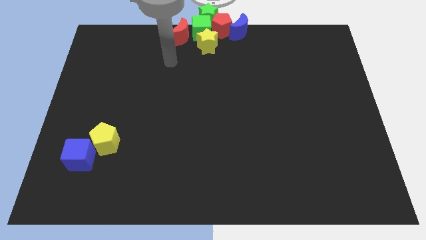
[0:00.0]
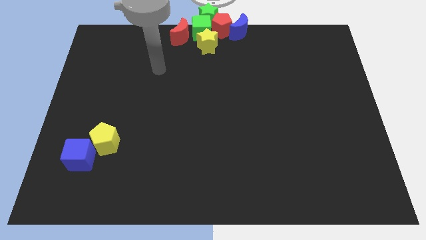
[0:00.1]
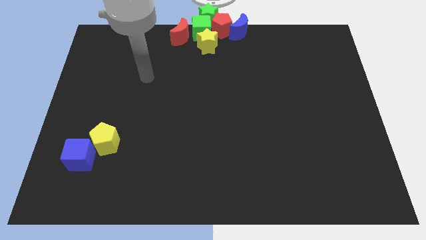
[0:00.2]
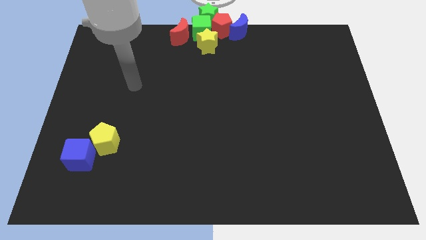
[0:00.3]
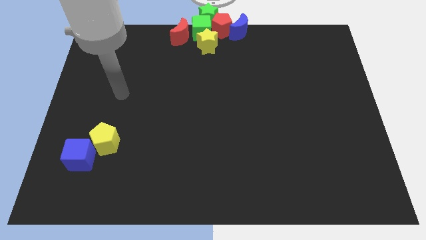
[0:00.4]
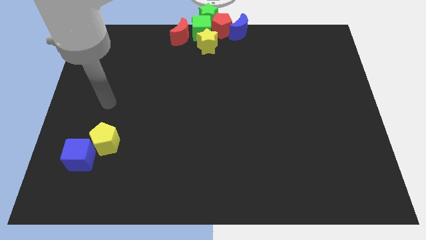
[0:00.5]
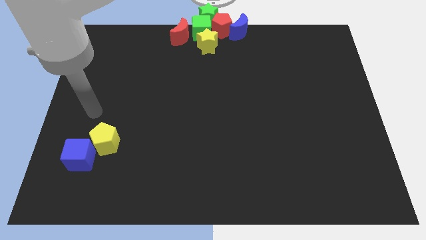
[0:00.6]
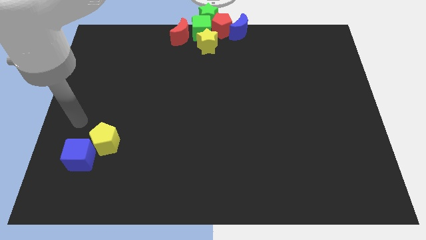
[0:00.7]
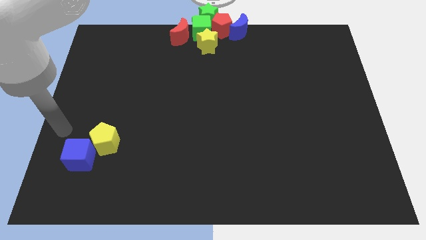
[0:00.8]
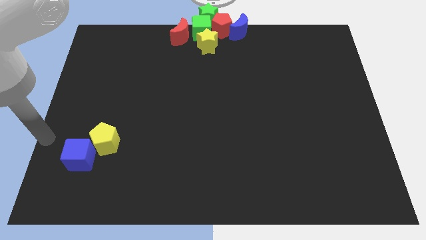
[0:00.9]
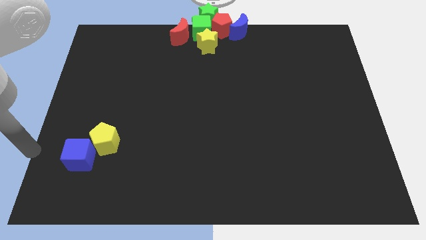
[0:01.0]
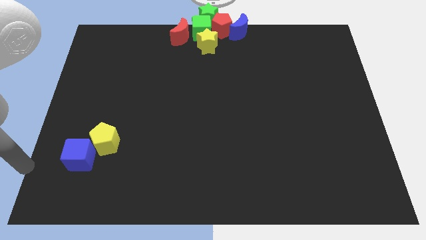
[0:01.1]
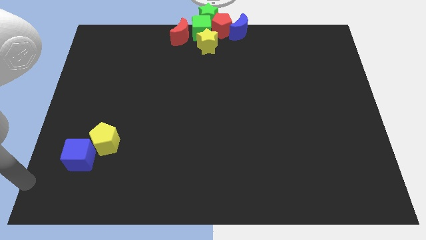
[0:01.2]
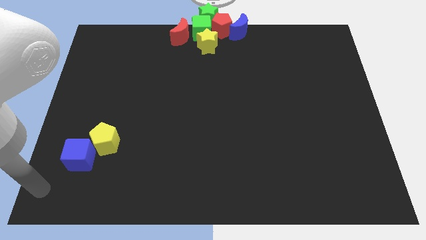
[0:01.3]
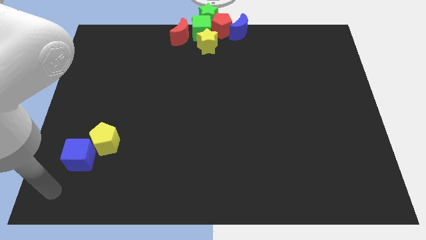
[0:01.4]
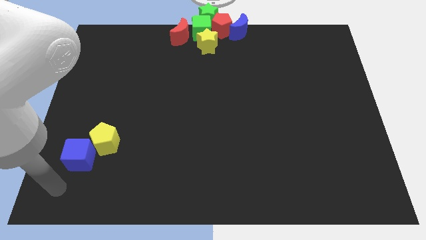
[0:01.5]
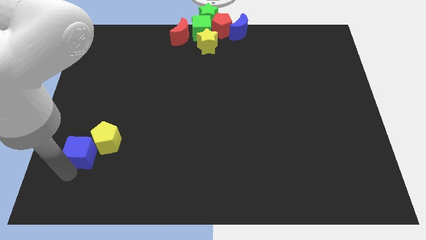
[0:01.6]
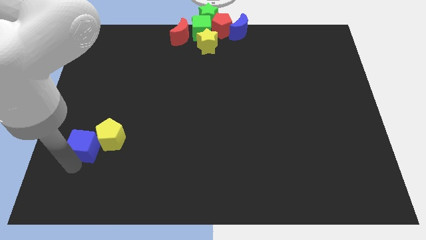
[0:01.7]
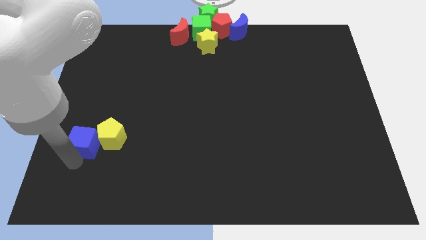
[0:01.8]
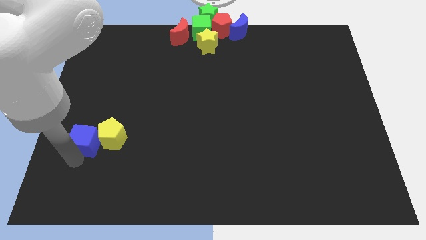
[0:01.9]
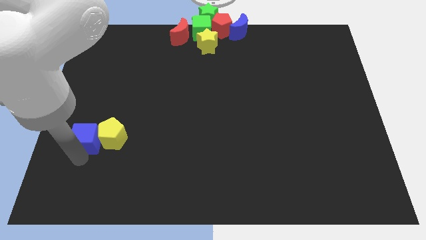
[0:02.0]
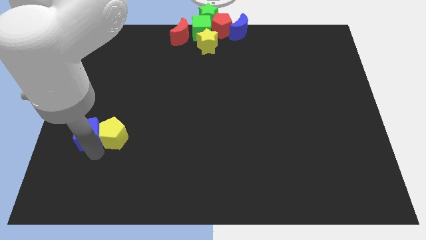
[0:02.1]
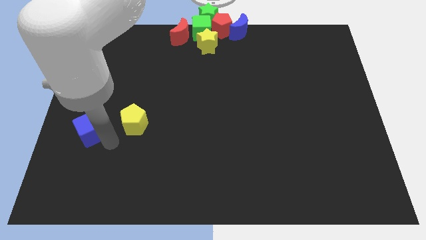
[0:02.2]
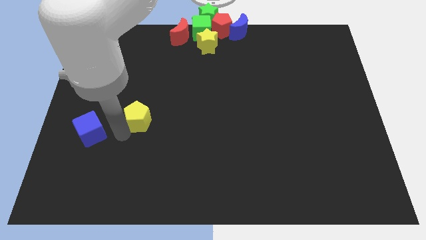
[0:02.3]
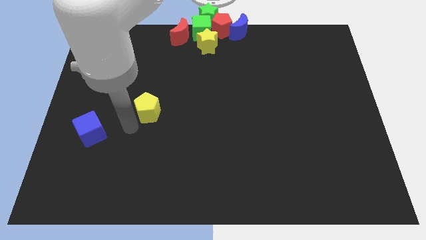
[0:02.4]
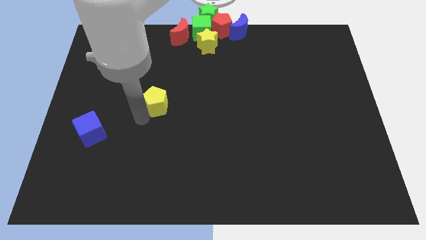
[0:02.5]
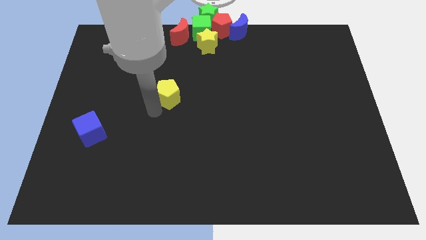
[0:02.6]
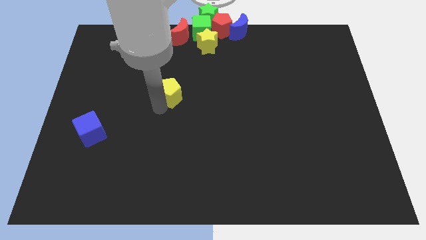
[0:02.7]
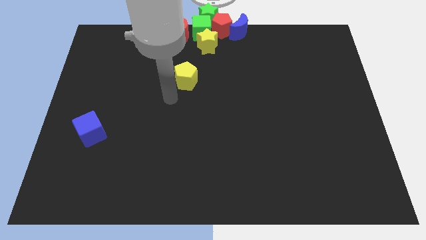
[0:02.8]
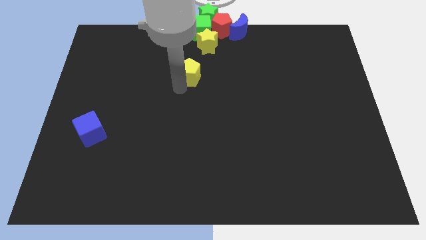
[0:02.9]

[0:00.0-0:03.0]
separate the yellow pentagon and the blue cube

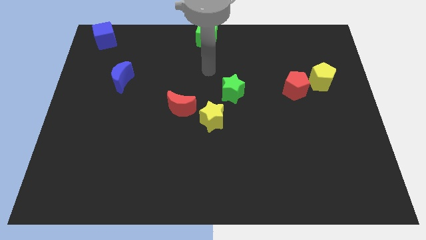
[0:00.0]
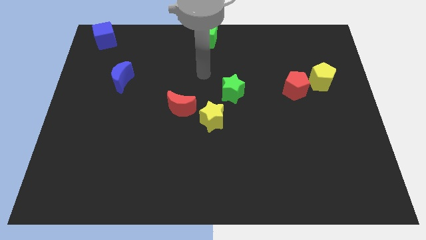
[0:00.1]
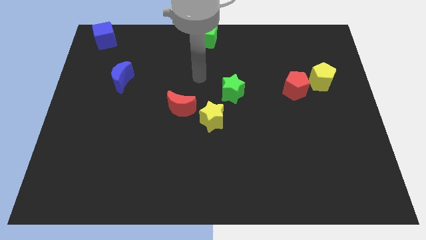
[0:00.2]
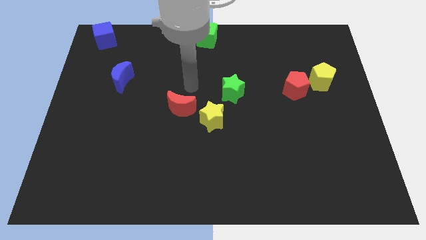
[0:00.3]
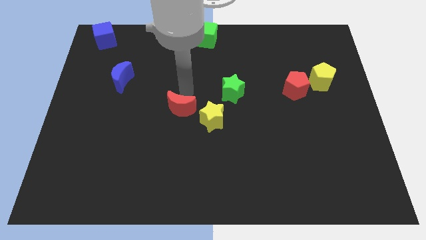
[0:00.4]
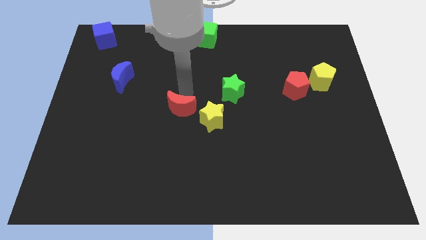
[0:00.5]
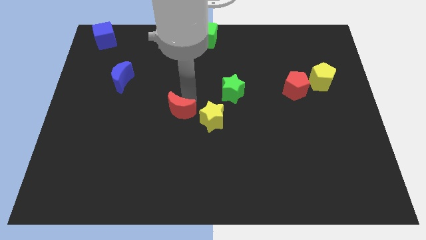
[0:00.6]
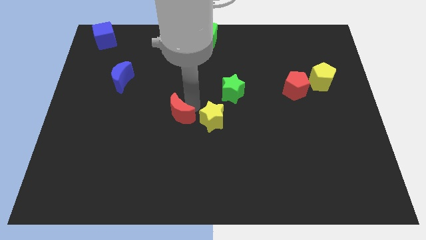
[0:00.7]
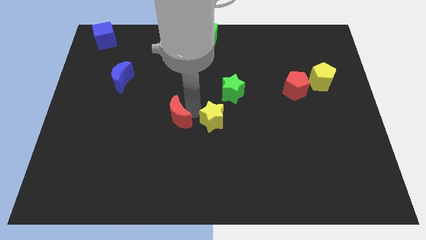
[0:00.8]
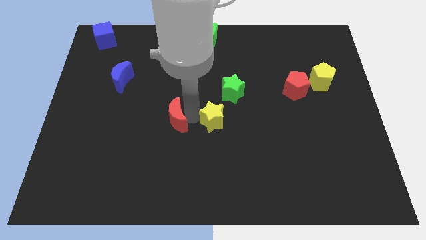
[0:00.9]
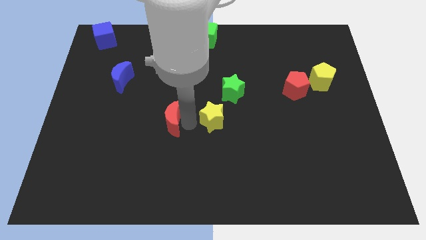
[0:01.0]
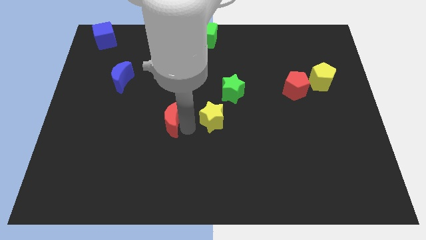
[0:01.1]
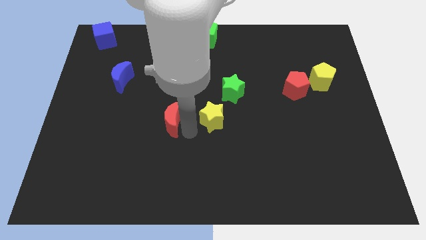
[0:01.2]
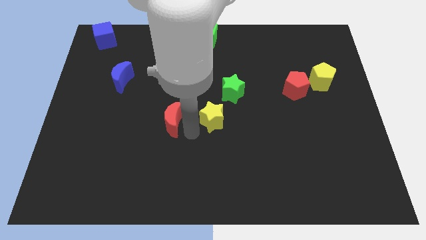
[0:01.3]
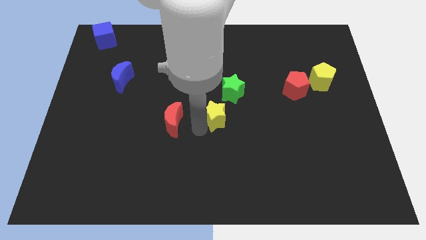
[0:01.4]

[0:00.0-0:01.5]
separate red moon and yellow star

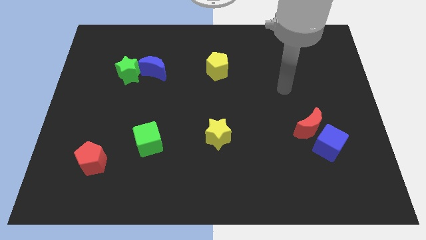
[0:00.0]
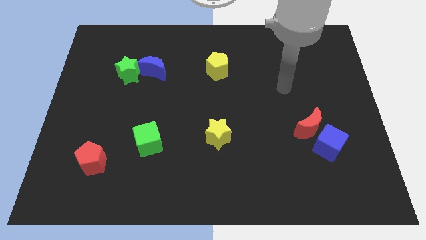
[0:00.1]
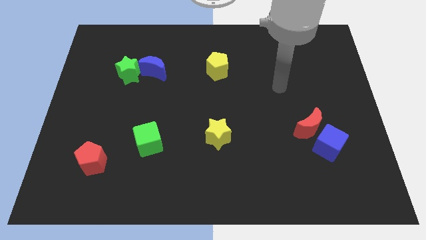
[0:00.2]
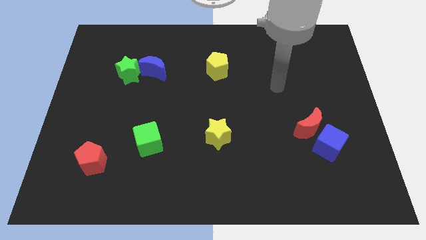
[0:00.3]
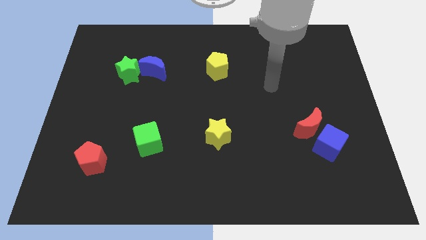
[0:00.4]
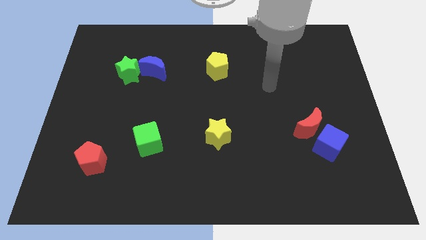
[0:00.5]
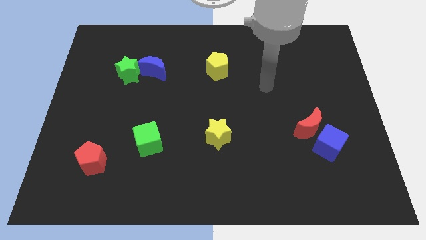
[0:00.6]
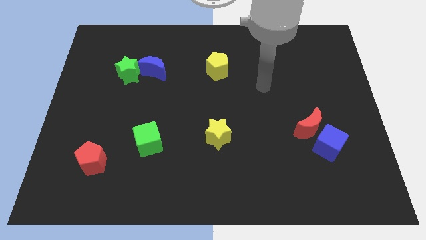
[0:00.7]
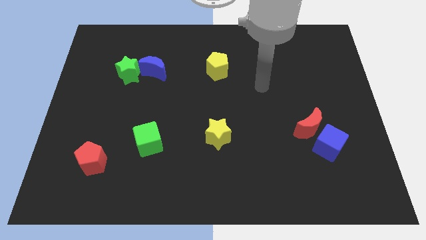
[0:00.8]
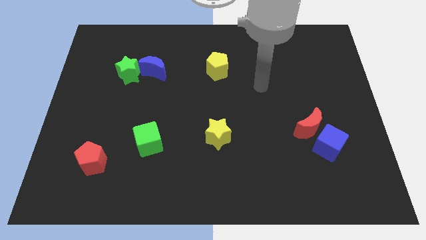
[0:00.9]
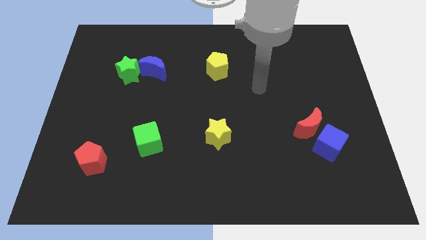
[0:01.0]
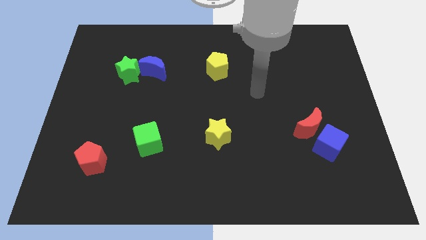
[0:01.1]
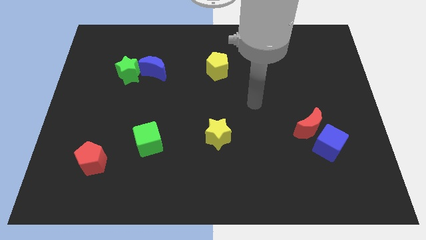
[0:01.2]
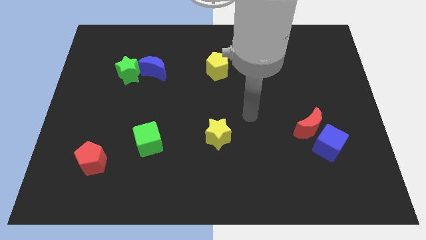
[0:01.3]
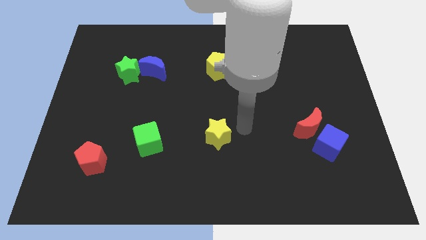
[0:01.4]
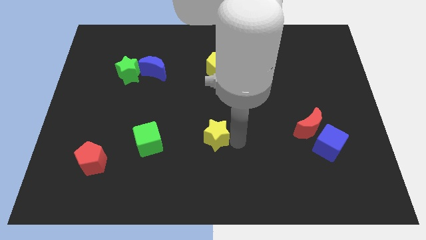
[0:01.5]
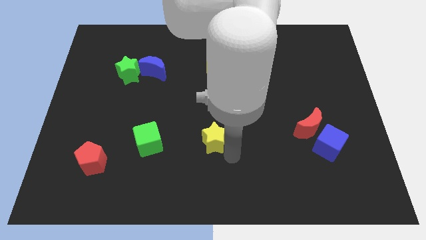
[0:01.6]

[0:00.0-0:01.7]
place the arm right to the yellow star

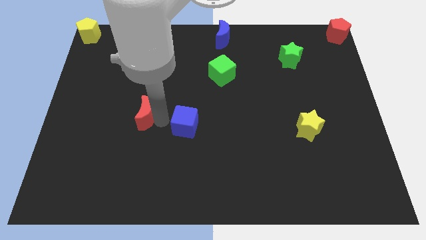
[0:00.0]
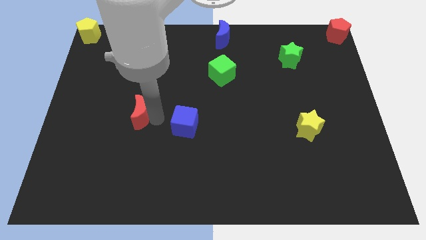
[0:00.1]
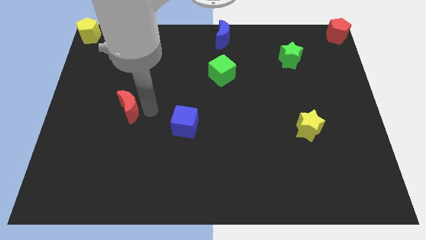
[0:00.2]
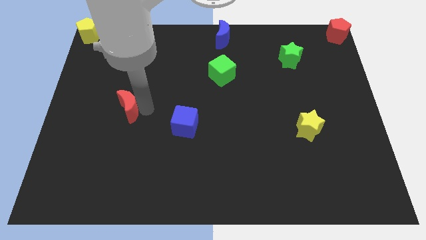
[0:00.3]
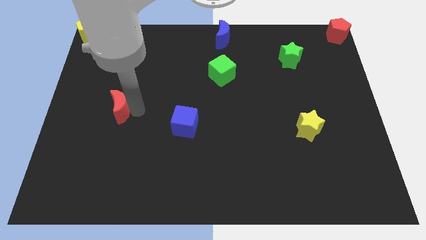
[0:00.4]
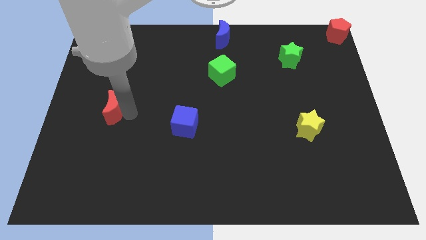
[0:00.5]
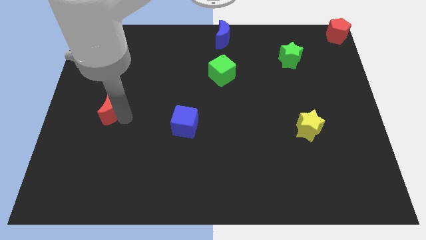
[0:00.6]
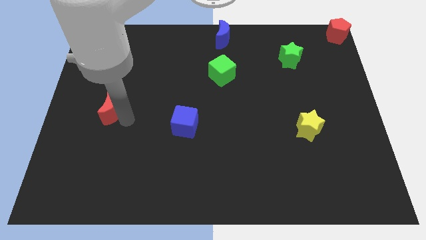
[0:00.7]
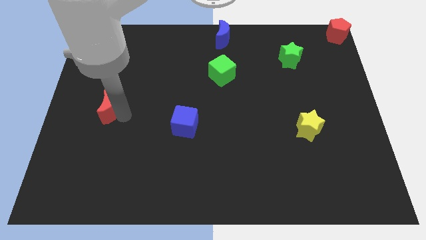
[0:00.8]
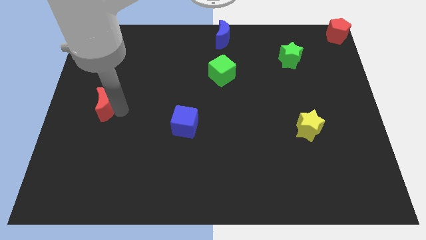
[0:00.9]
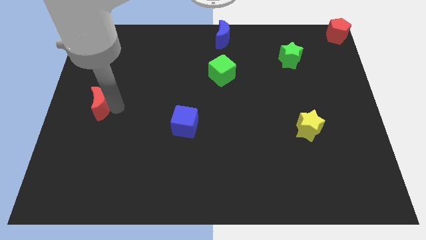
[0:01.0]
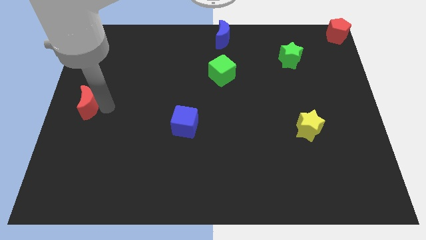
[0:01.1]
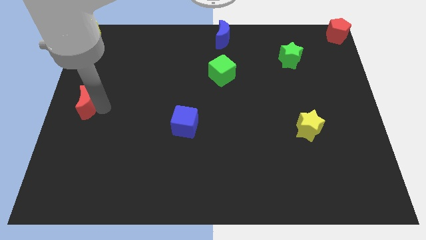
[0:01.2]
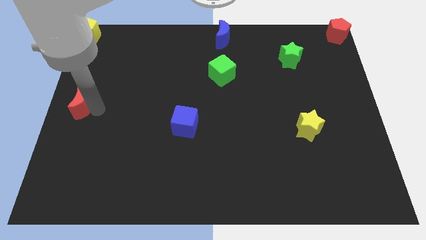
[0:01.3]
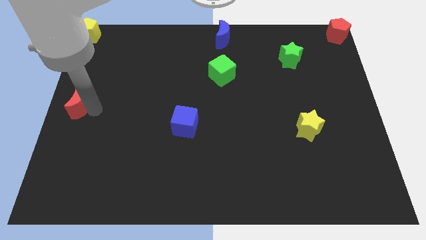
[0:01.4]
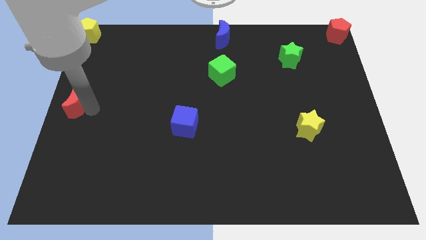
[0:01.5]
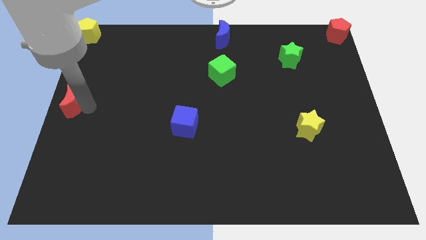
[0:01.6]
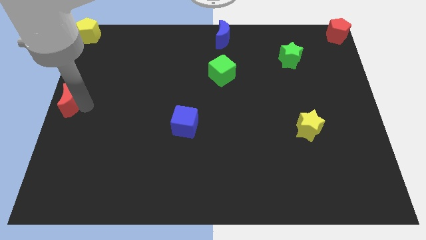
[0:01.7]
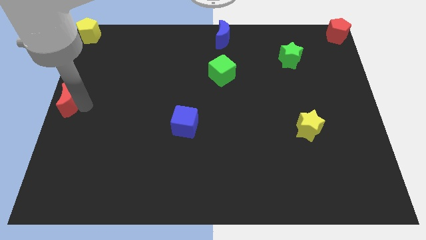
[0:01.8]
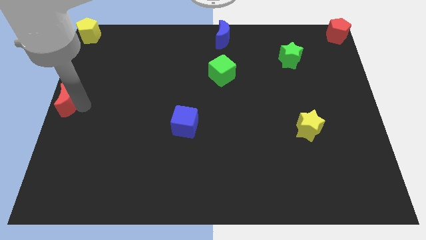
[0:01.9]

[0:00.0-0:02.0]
push the red crescent to the left center of the board

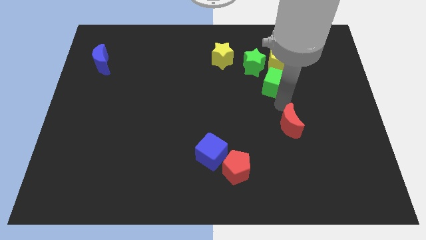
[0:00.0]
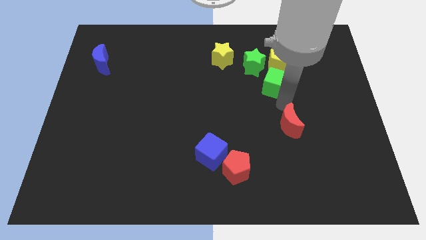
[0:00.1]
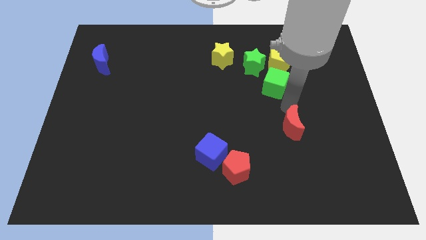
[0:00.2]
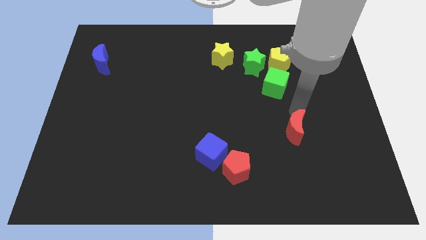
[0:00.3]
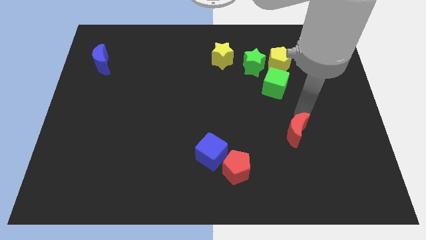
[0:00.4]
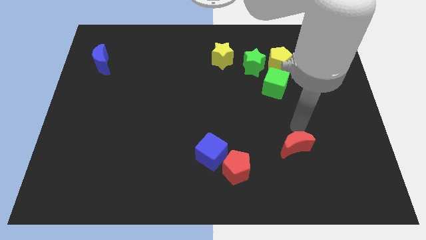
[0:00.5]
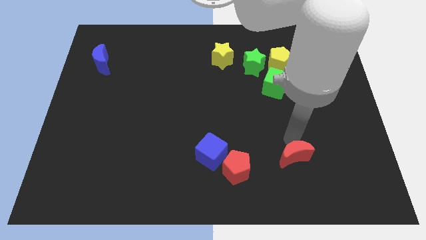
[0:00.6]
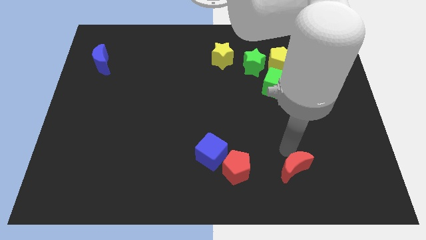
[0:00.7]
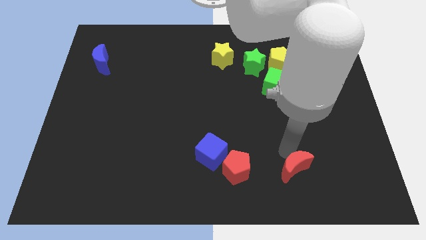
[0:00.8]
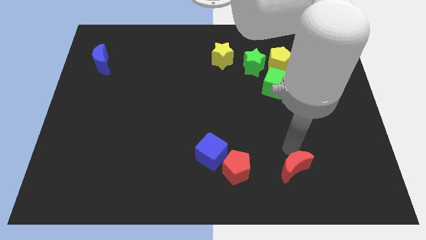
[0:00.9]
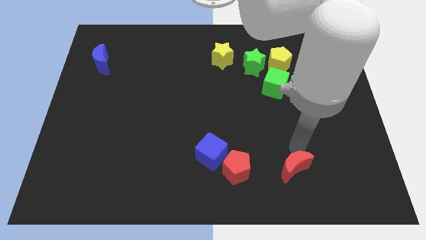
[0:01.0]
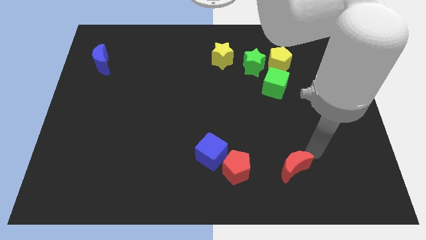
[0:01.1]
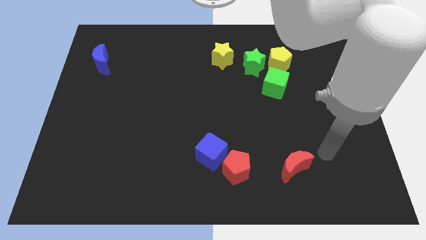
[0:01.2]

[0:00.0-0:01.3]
move the red crescent to the right of the red pentagon
